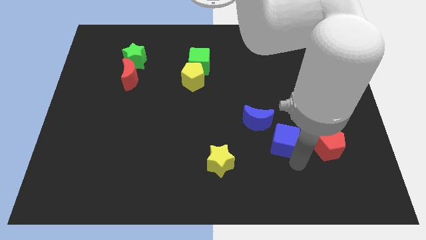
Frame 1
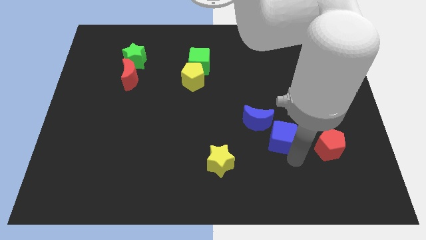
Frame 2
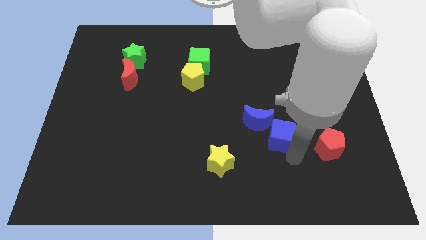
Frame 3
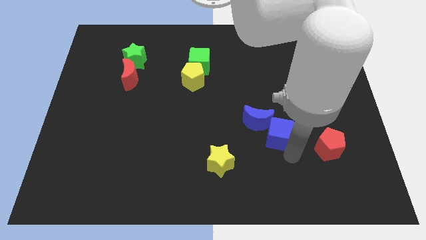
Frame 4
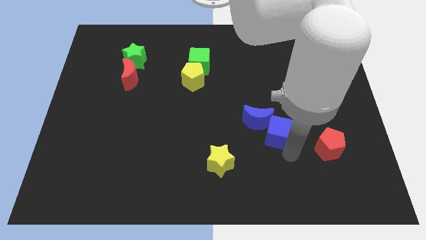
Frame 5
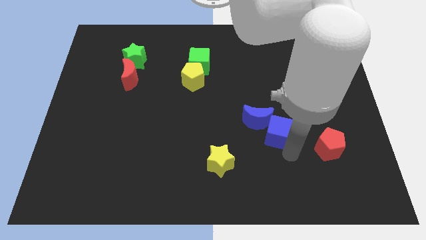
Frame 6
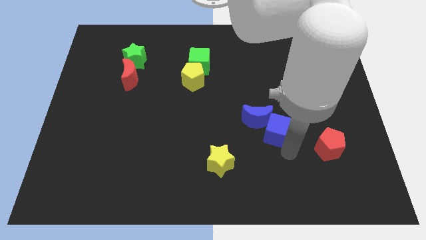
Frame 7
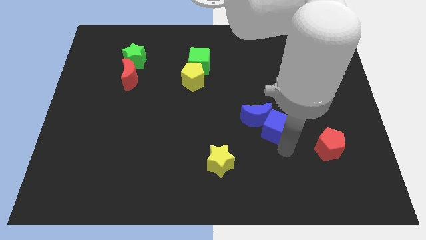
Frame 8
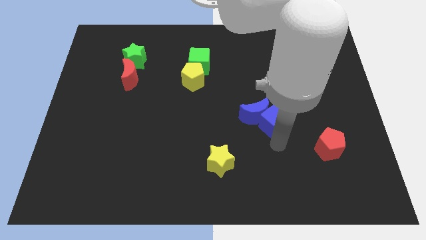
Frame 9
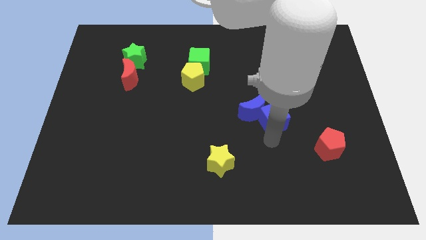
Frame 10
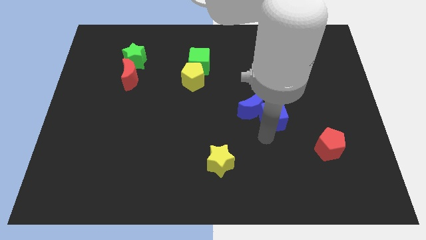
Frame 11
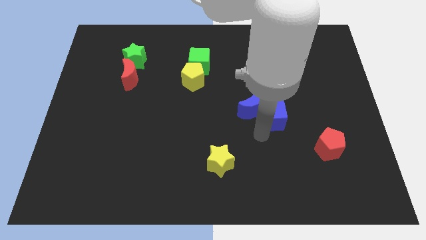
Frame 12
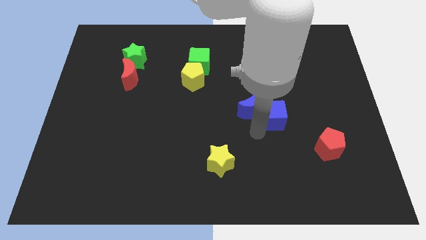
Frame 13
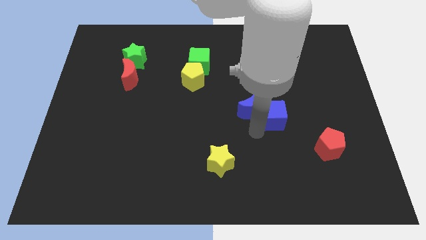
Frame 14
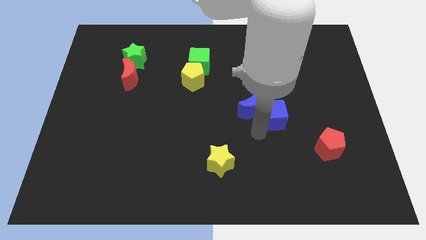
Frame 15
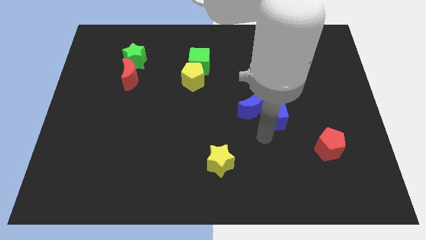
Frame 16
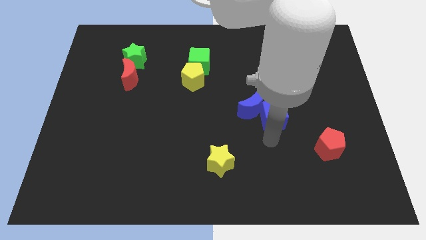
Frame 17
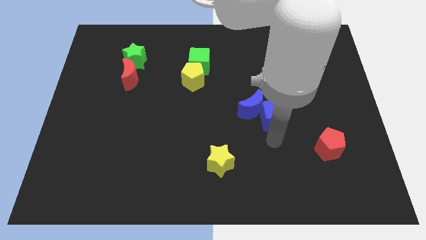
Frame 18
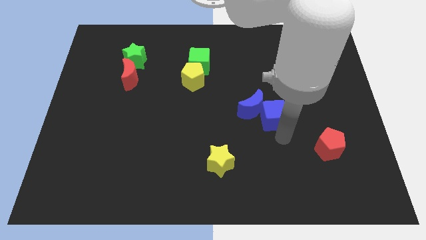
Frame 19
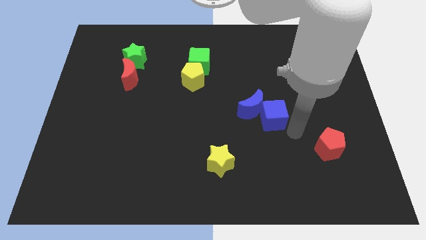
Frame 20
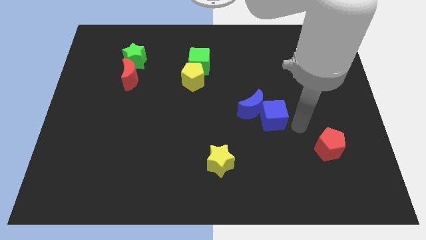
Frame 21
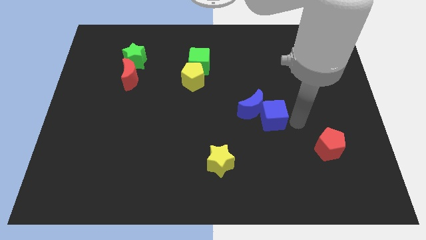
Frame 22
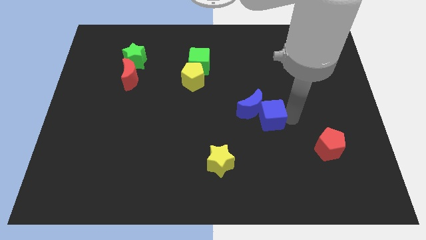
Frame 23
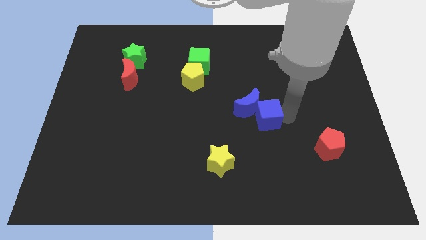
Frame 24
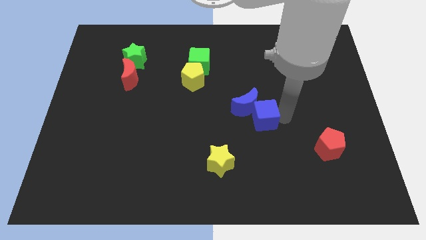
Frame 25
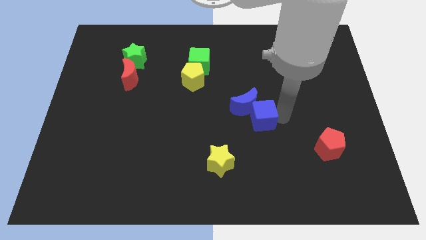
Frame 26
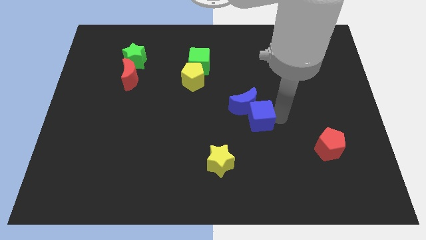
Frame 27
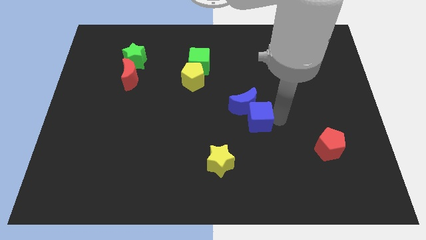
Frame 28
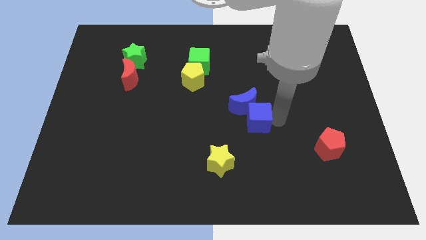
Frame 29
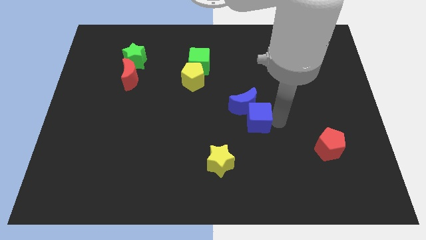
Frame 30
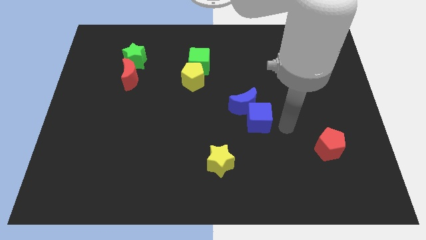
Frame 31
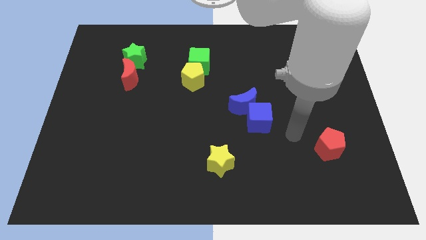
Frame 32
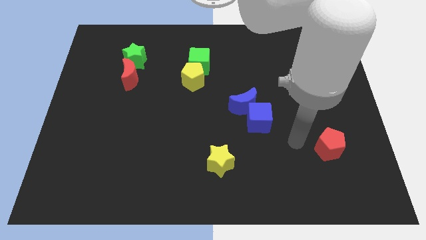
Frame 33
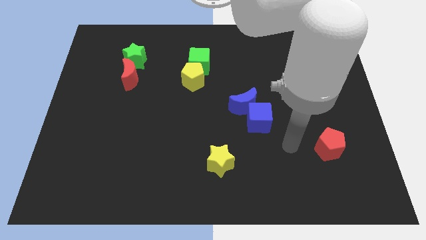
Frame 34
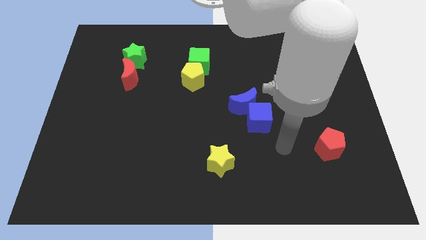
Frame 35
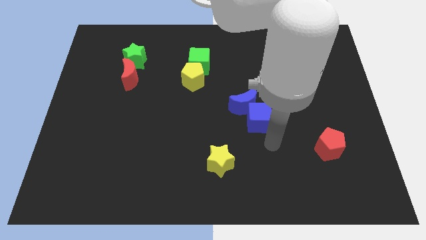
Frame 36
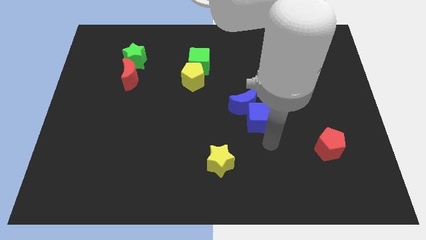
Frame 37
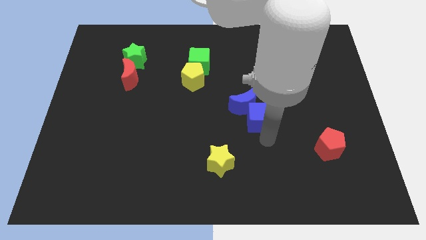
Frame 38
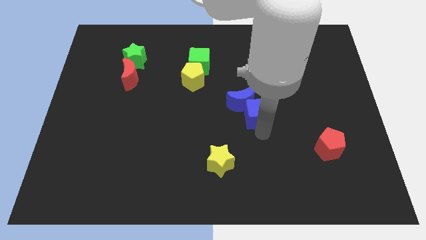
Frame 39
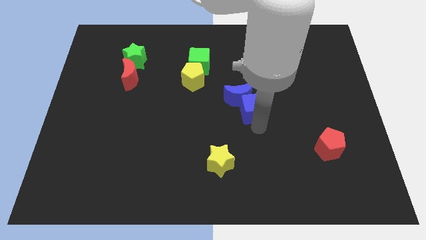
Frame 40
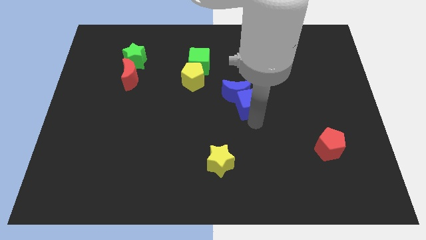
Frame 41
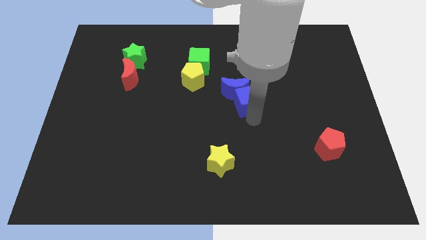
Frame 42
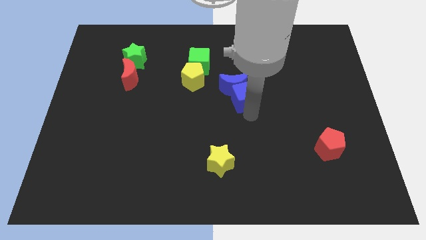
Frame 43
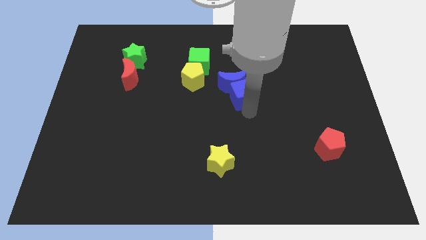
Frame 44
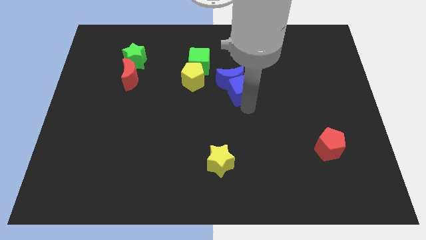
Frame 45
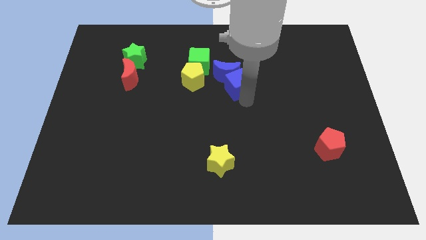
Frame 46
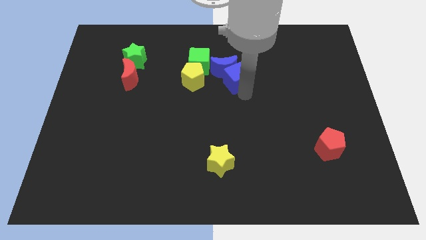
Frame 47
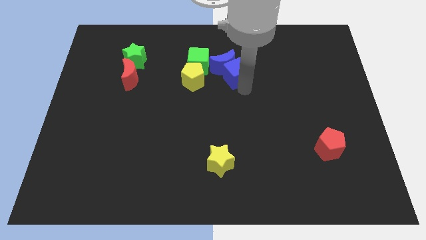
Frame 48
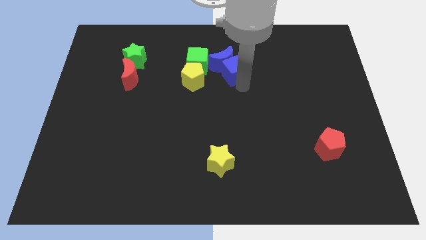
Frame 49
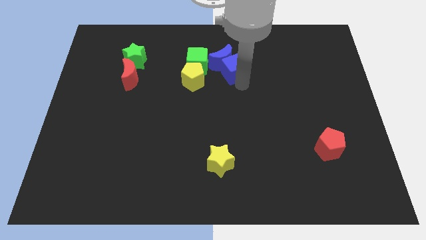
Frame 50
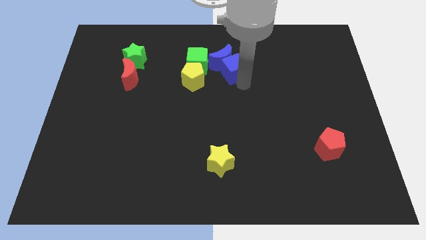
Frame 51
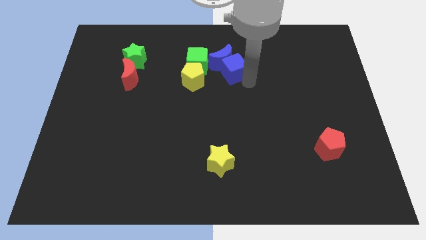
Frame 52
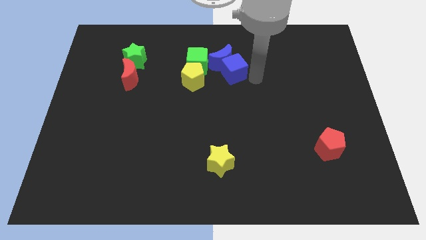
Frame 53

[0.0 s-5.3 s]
place the blue cube and crescent above the yellow star

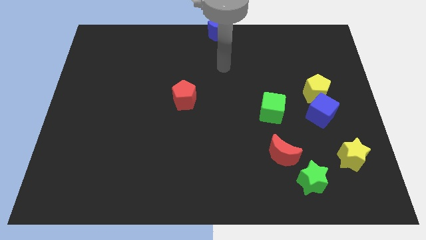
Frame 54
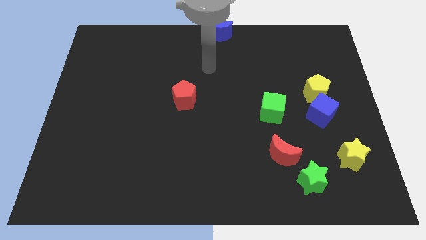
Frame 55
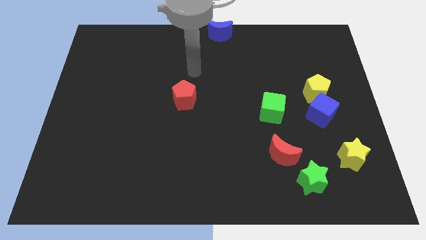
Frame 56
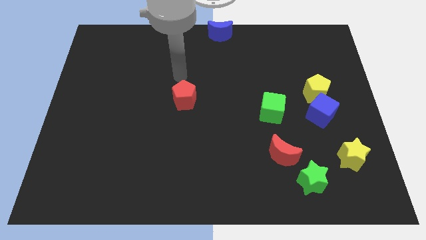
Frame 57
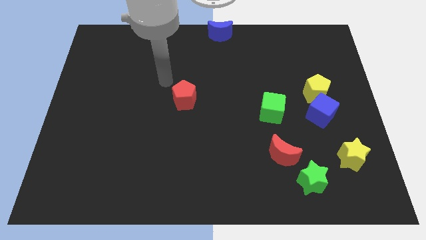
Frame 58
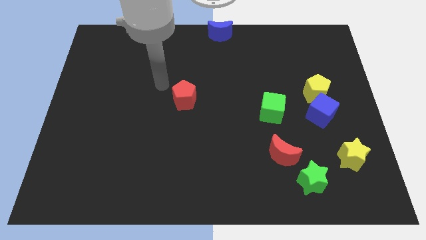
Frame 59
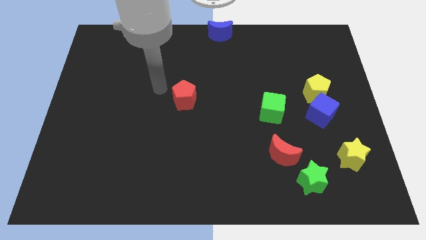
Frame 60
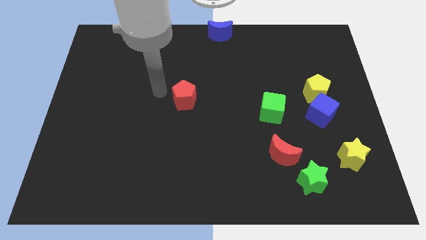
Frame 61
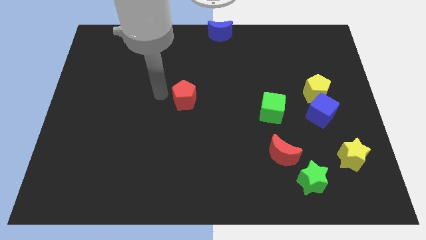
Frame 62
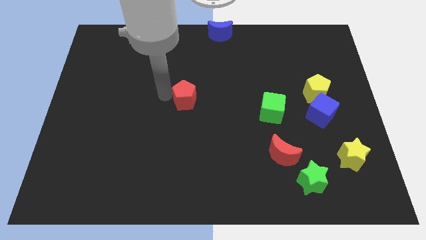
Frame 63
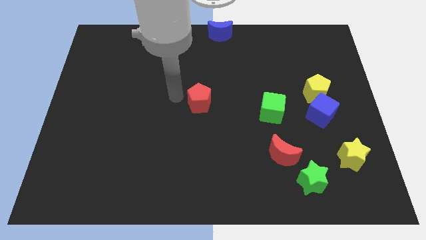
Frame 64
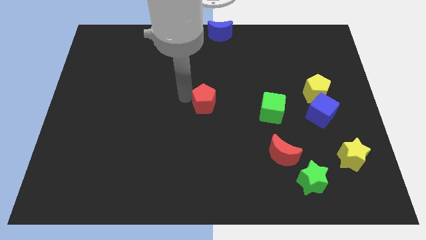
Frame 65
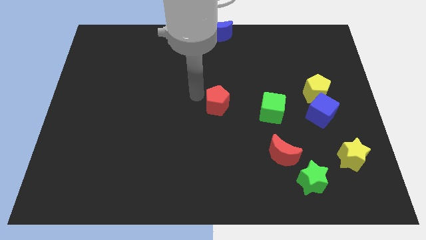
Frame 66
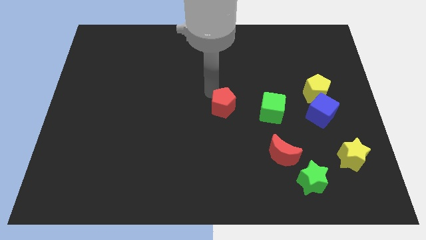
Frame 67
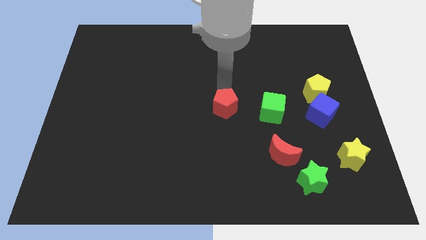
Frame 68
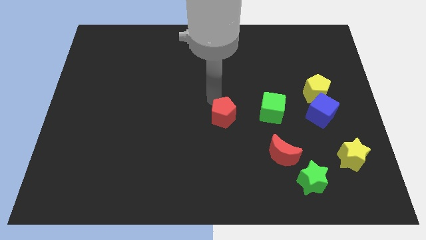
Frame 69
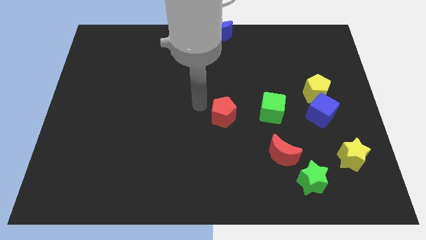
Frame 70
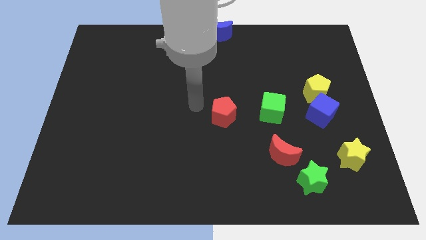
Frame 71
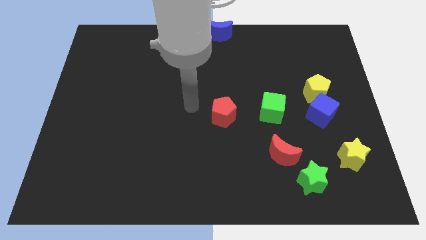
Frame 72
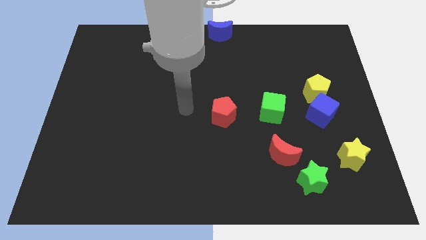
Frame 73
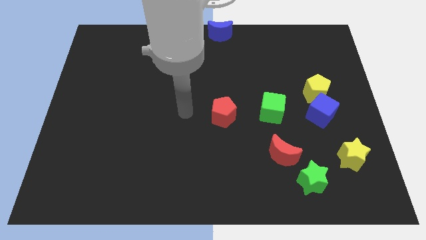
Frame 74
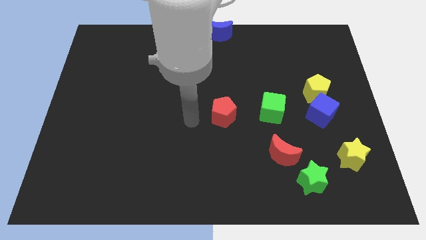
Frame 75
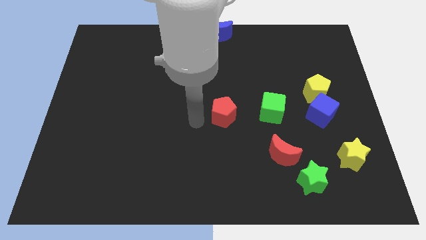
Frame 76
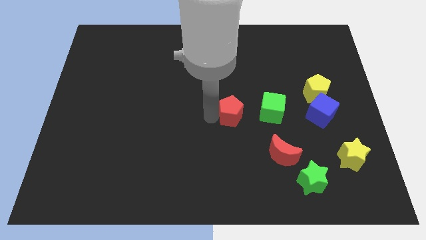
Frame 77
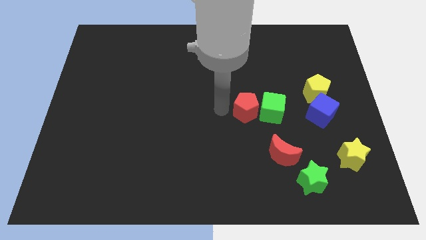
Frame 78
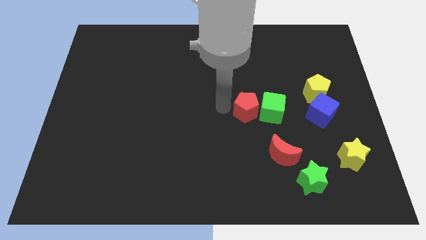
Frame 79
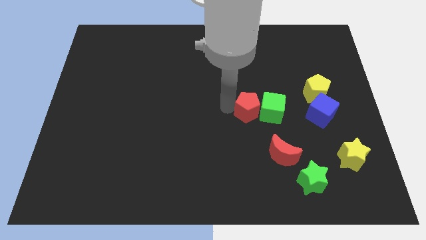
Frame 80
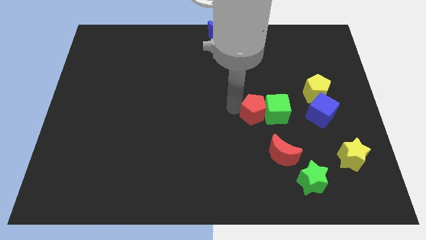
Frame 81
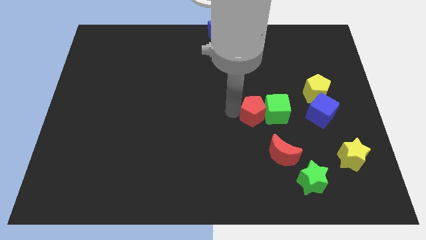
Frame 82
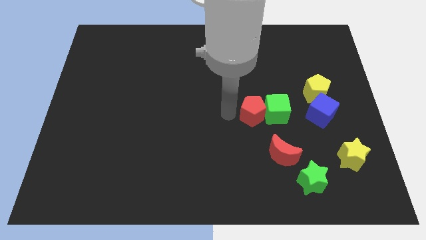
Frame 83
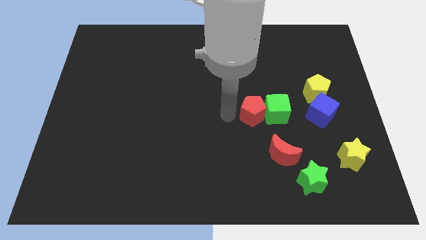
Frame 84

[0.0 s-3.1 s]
push red pentagon into green cube

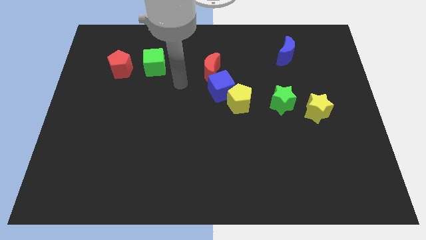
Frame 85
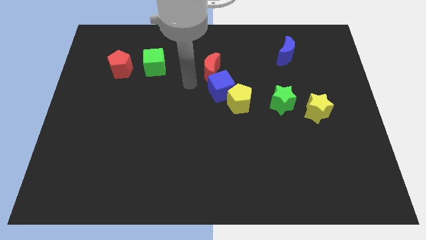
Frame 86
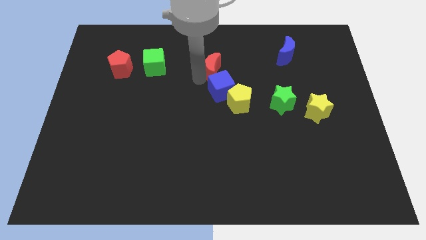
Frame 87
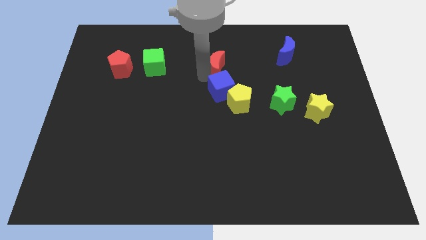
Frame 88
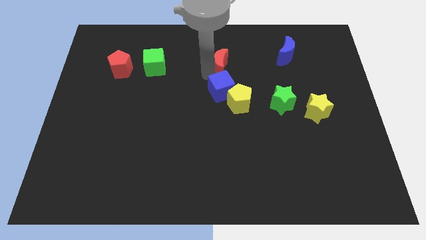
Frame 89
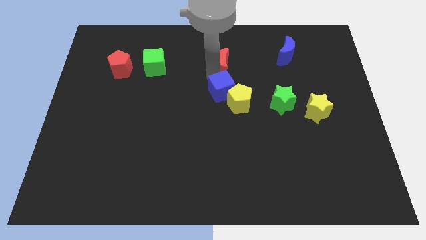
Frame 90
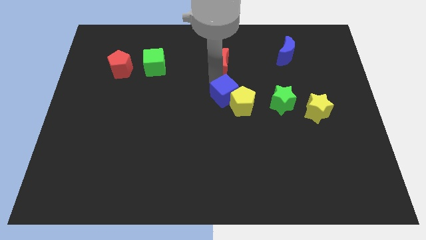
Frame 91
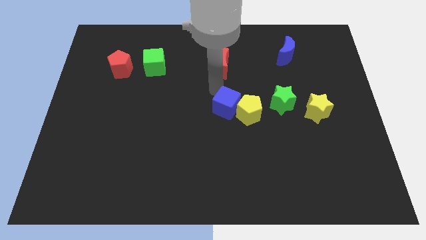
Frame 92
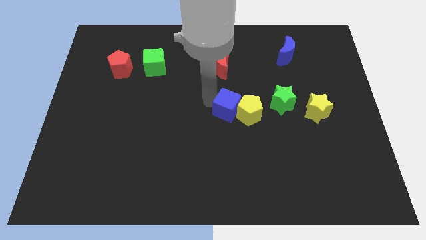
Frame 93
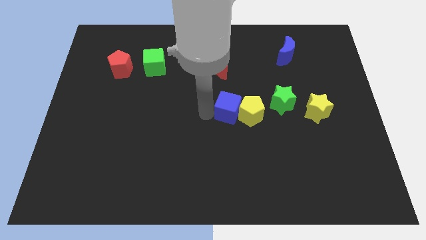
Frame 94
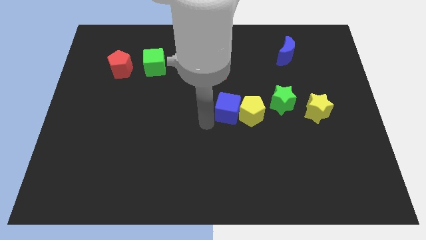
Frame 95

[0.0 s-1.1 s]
separate blue cube and red moon
